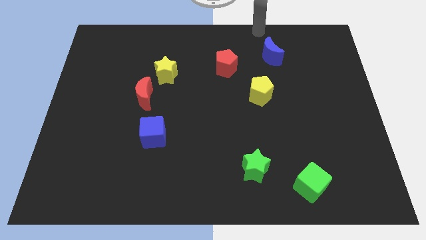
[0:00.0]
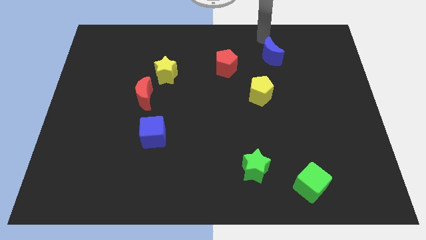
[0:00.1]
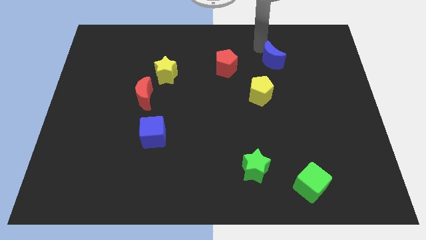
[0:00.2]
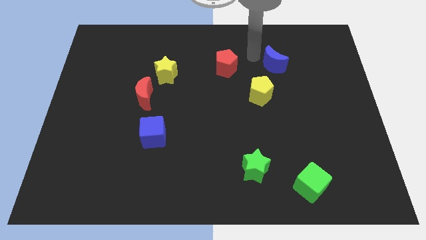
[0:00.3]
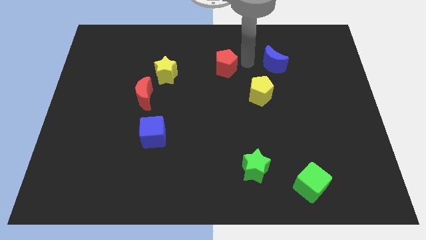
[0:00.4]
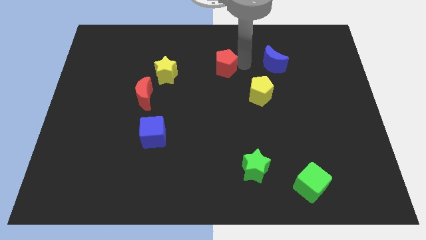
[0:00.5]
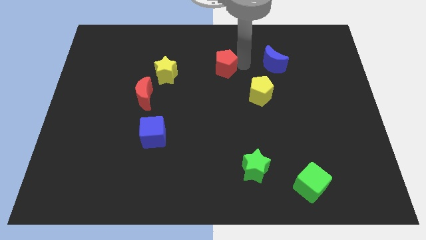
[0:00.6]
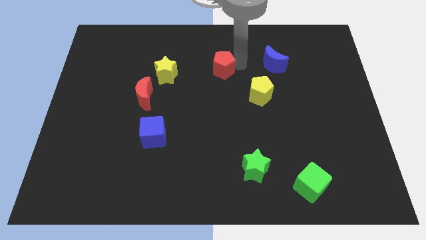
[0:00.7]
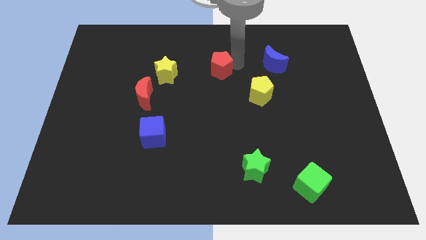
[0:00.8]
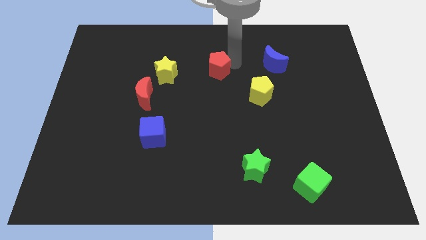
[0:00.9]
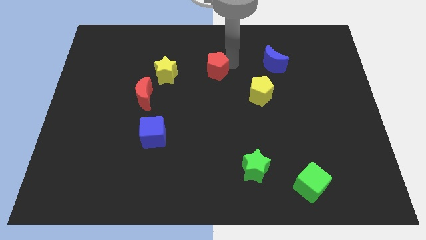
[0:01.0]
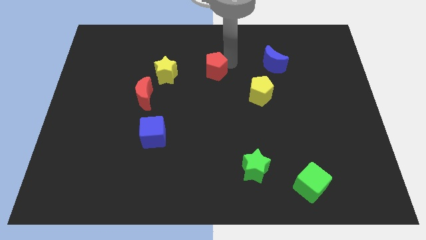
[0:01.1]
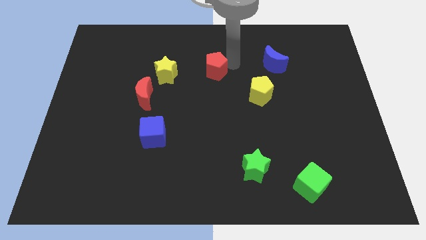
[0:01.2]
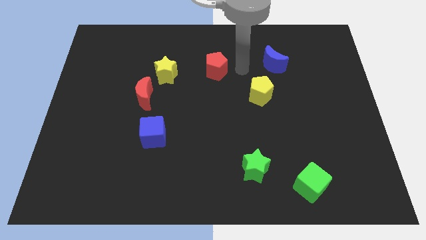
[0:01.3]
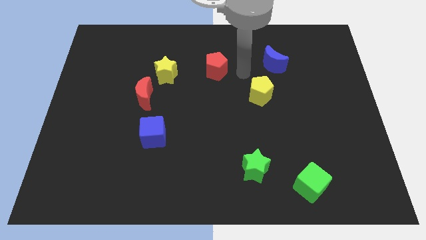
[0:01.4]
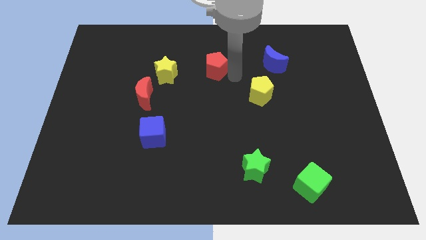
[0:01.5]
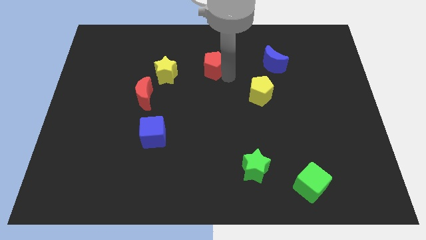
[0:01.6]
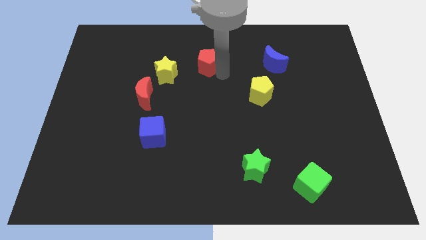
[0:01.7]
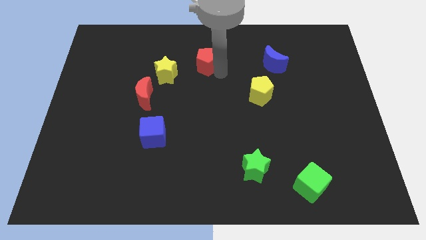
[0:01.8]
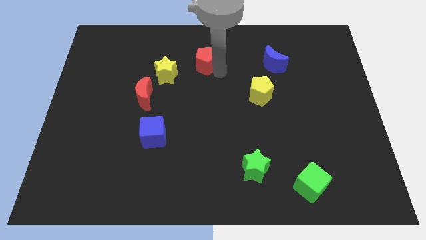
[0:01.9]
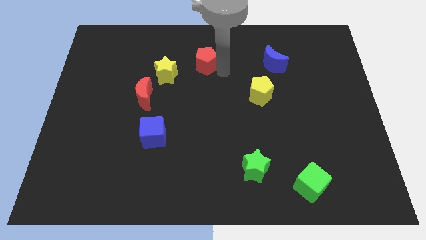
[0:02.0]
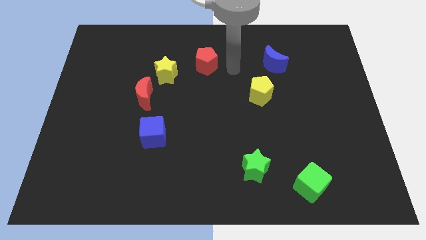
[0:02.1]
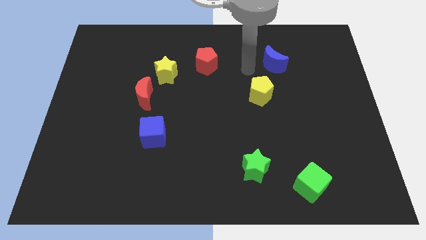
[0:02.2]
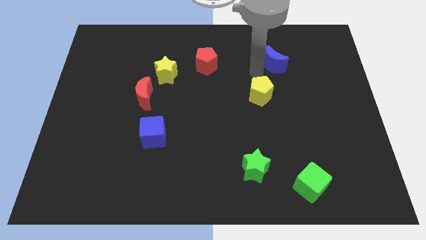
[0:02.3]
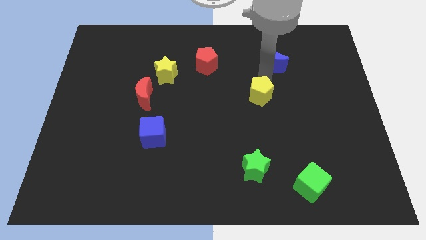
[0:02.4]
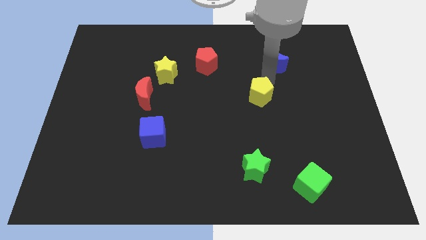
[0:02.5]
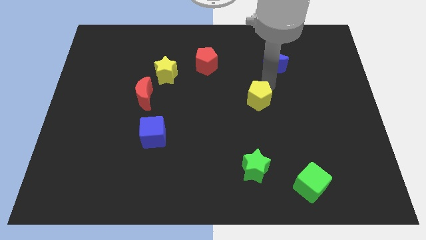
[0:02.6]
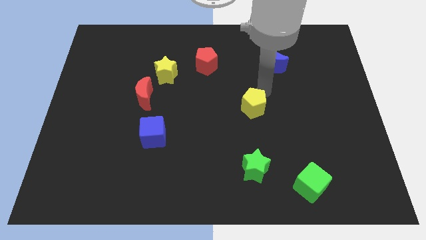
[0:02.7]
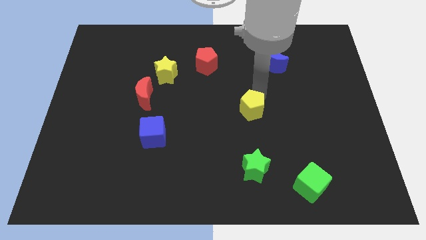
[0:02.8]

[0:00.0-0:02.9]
separate blue moon yellow and red pentagon

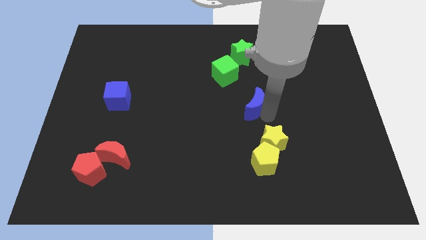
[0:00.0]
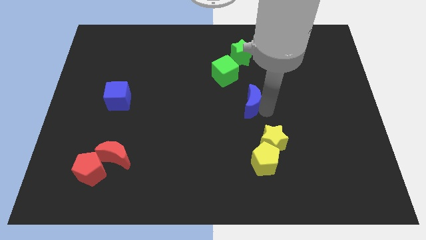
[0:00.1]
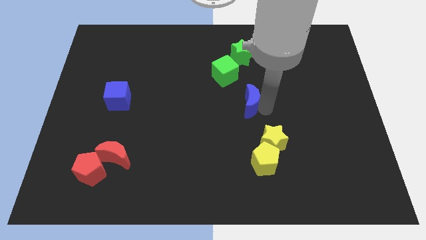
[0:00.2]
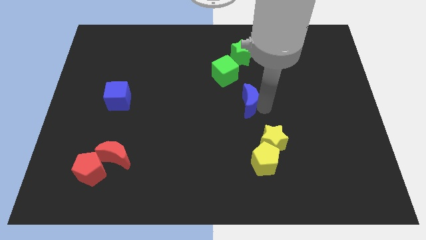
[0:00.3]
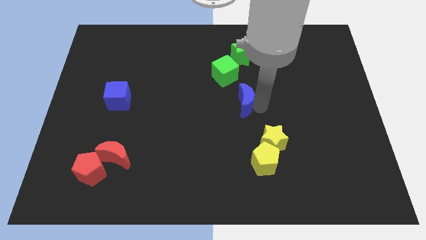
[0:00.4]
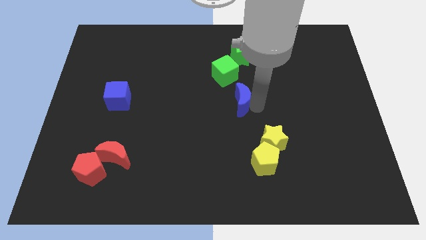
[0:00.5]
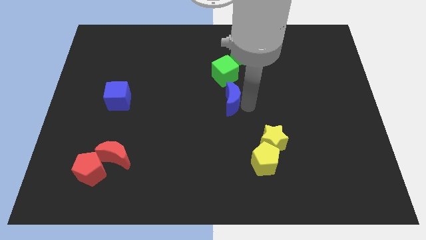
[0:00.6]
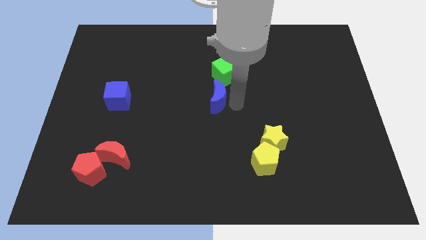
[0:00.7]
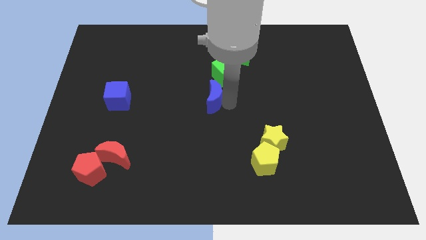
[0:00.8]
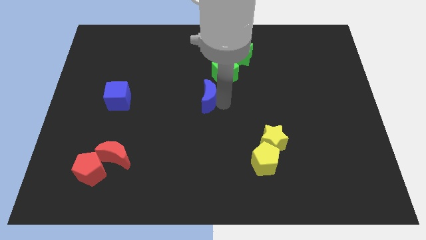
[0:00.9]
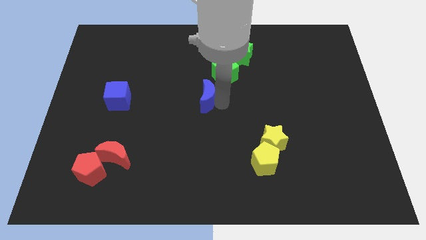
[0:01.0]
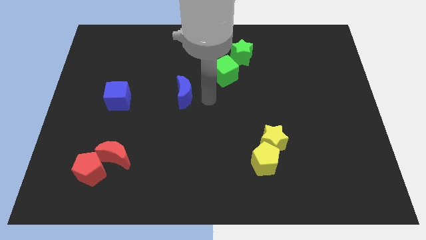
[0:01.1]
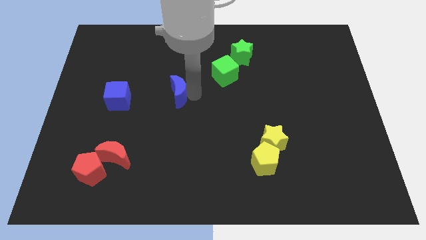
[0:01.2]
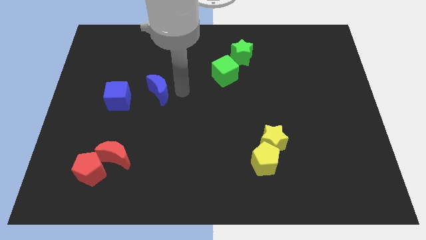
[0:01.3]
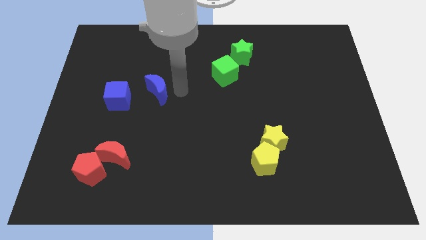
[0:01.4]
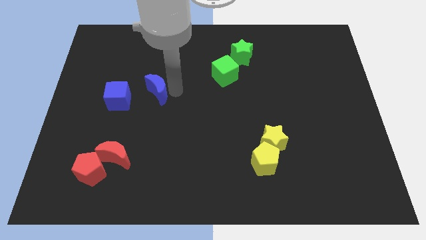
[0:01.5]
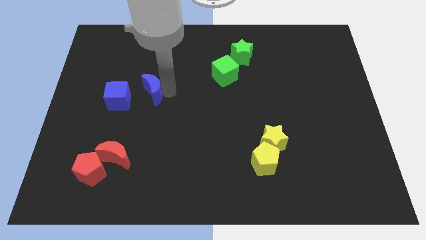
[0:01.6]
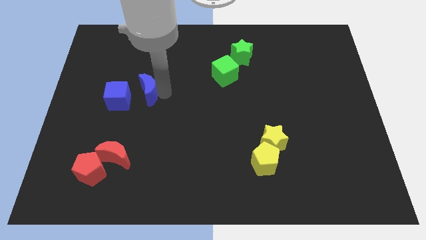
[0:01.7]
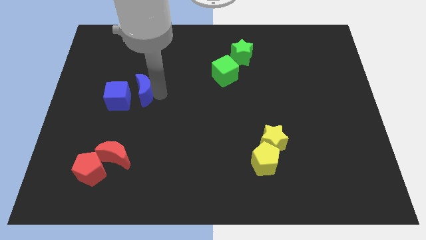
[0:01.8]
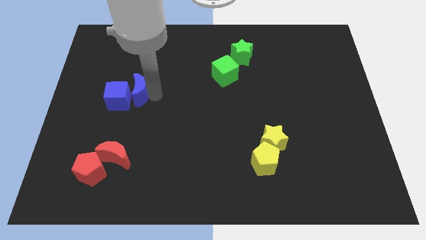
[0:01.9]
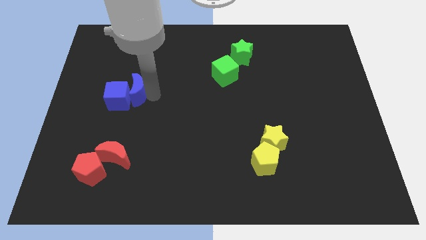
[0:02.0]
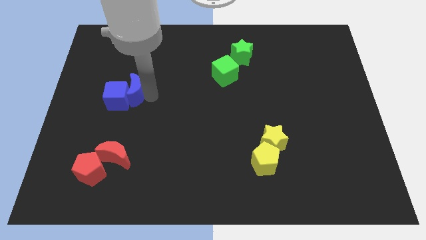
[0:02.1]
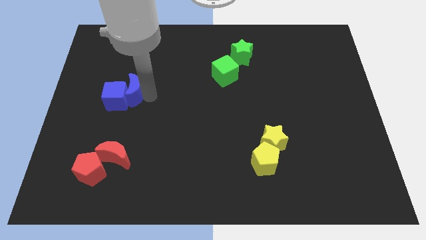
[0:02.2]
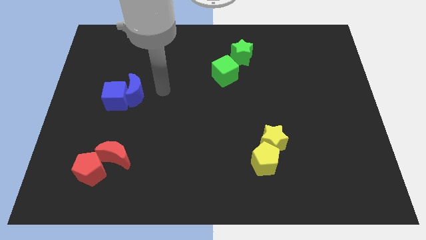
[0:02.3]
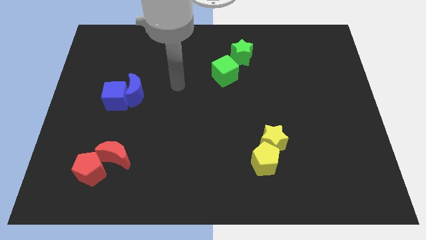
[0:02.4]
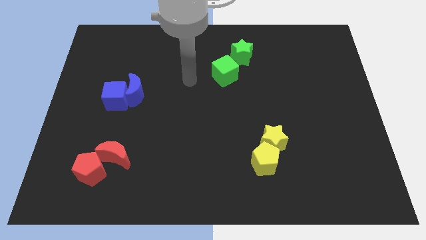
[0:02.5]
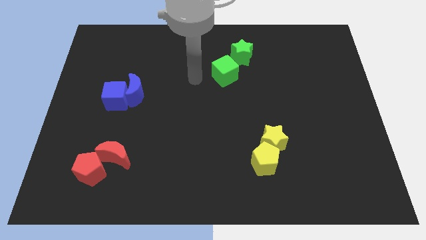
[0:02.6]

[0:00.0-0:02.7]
push blue moon in to blue cube

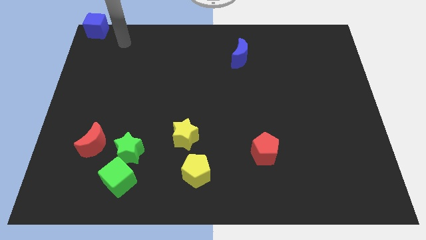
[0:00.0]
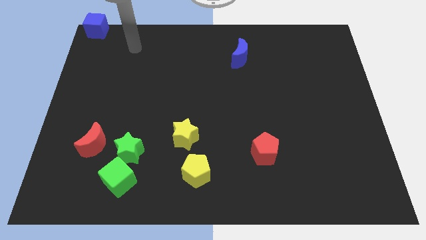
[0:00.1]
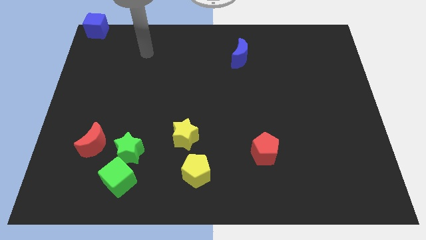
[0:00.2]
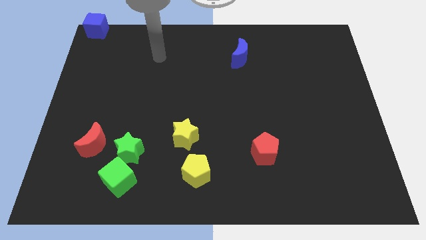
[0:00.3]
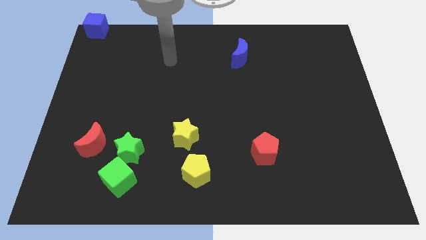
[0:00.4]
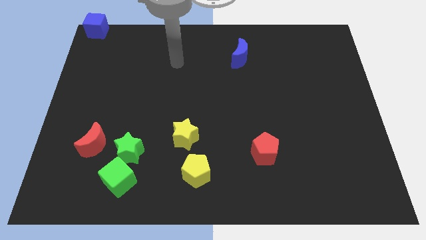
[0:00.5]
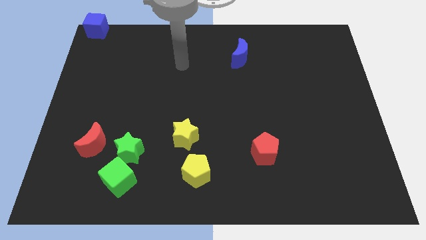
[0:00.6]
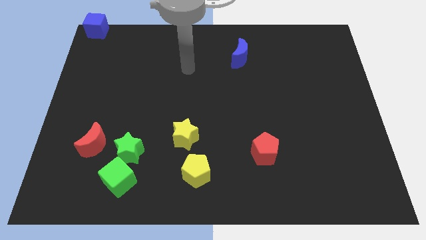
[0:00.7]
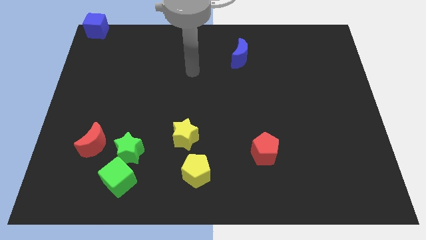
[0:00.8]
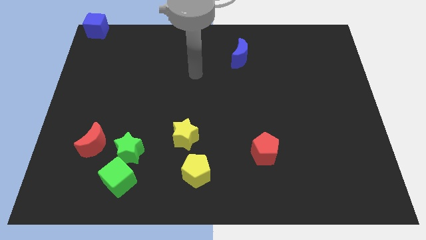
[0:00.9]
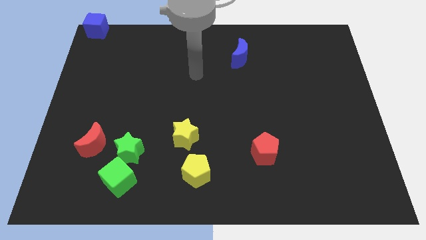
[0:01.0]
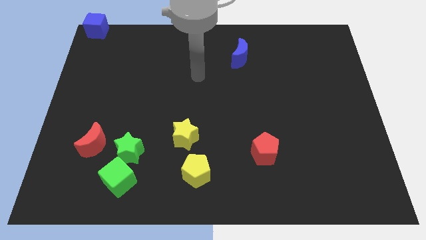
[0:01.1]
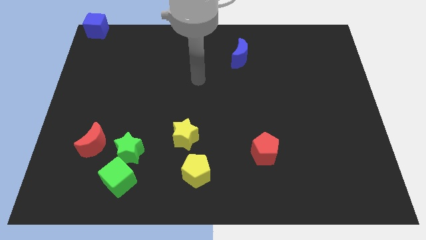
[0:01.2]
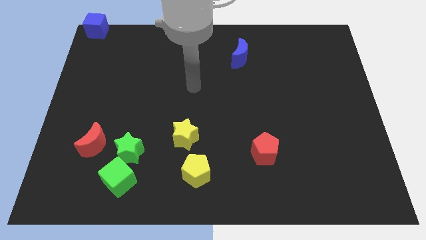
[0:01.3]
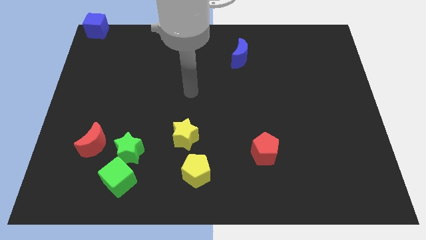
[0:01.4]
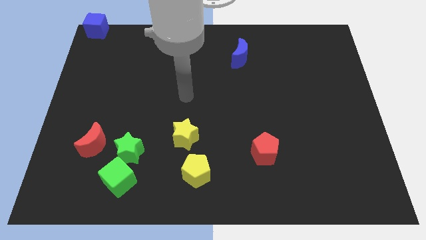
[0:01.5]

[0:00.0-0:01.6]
place your arm at the top of the yellow star

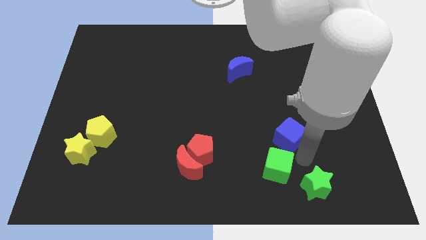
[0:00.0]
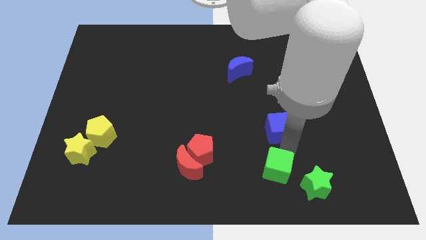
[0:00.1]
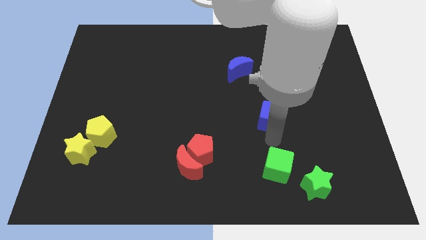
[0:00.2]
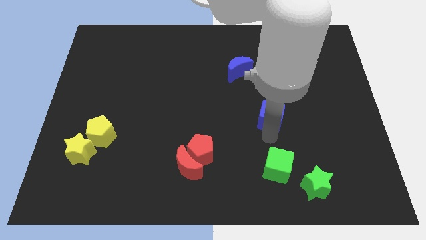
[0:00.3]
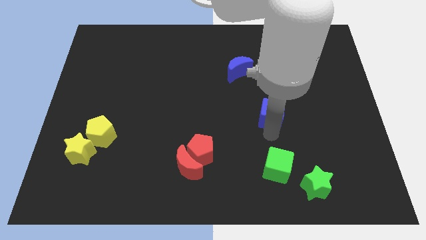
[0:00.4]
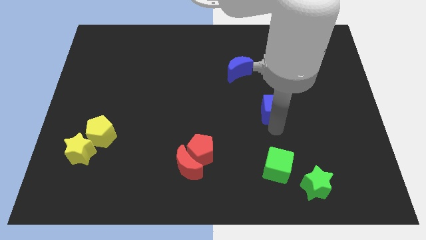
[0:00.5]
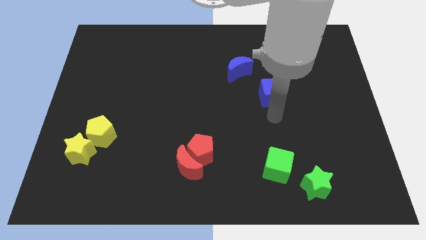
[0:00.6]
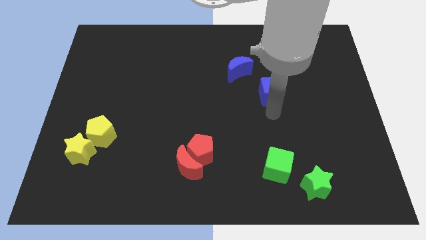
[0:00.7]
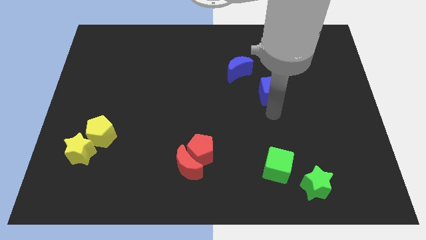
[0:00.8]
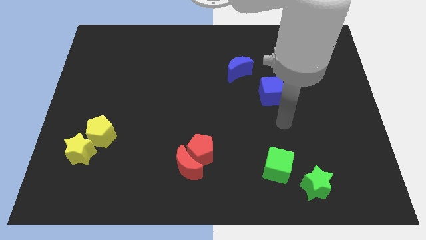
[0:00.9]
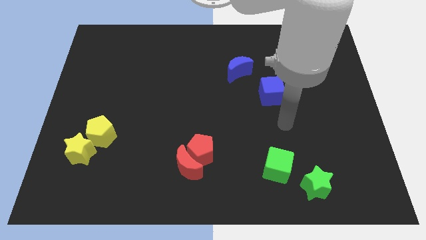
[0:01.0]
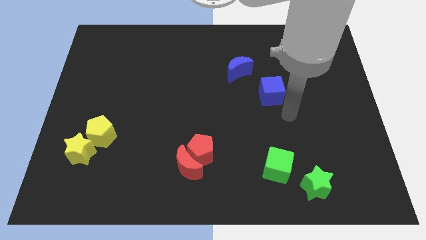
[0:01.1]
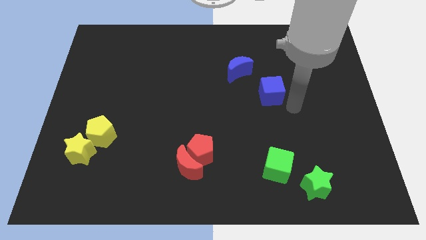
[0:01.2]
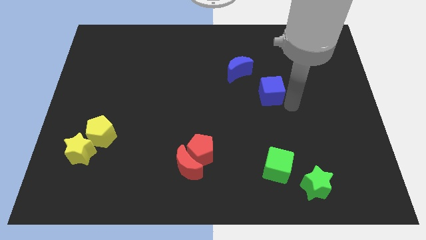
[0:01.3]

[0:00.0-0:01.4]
move the blue cube slightly up

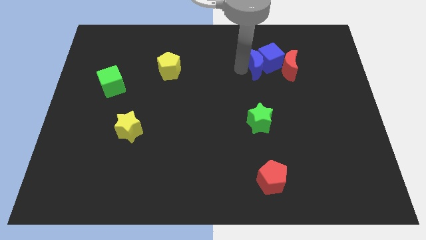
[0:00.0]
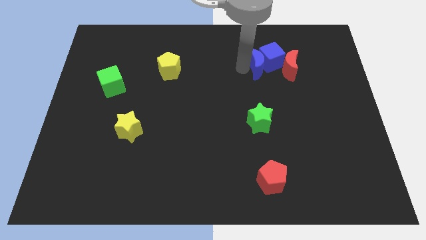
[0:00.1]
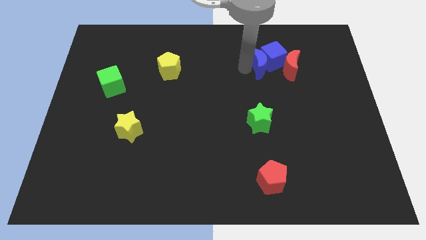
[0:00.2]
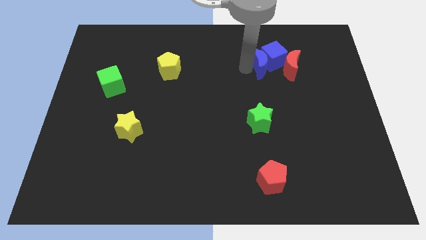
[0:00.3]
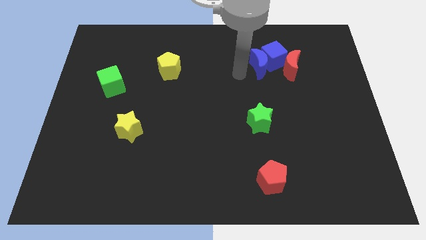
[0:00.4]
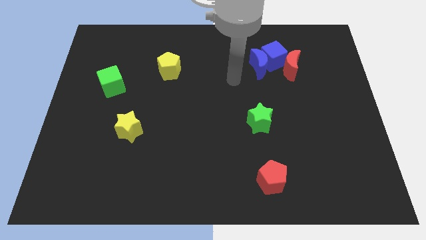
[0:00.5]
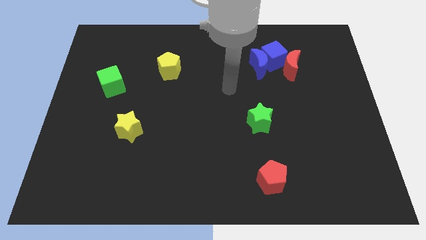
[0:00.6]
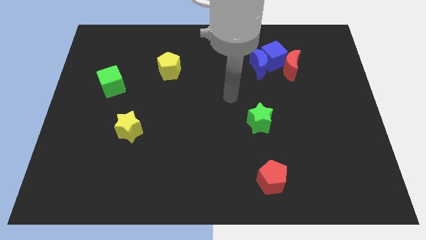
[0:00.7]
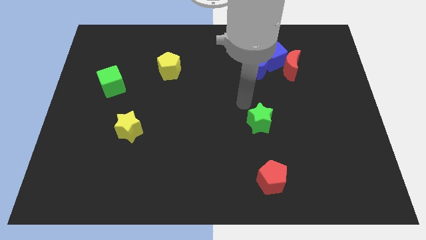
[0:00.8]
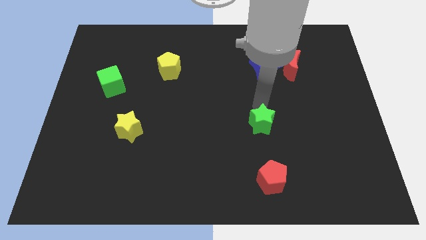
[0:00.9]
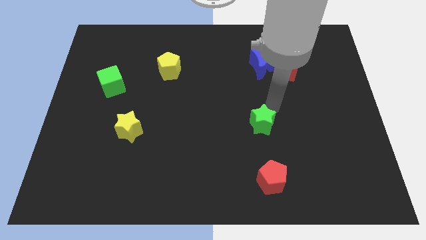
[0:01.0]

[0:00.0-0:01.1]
point your arm above the green star
